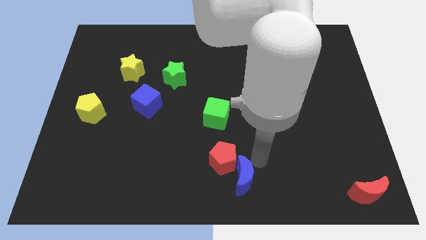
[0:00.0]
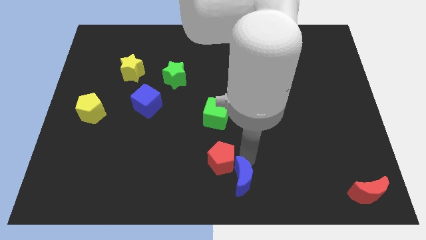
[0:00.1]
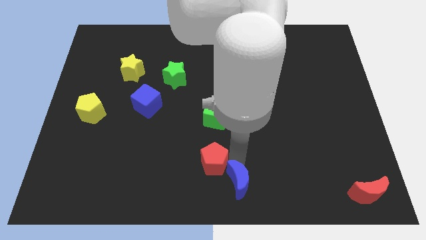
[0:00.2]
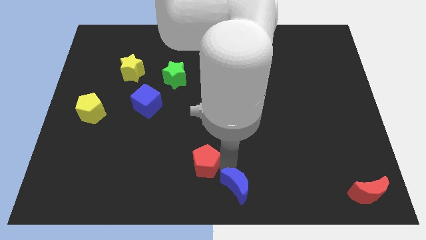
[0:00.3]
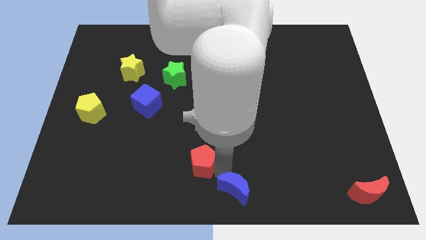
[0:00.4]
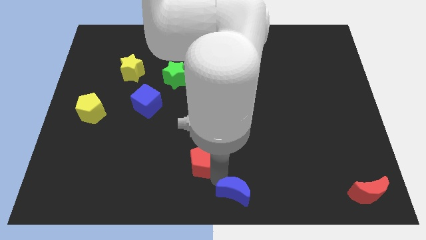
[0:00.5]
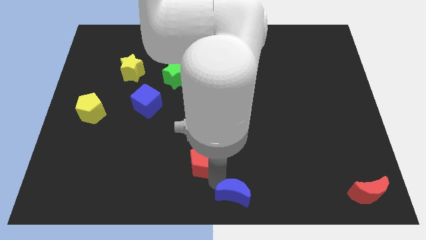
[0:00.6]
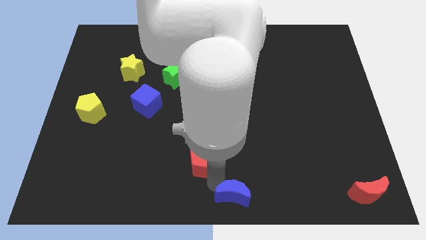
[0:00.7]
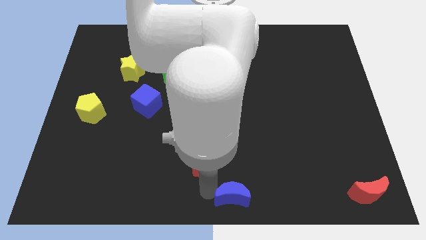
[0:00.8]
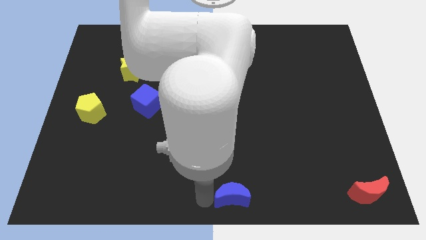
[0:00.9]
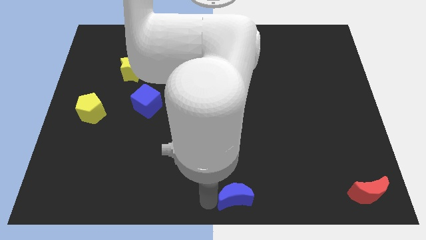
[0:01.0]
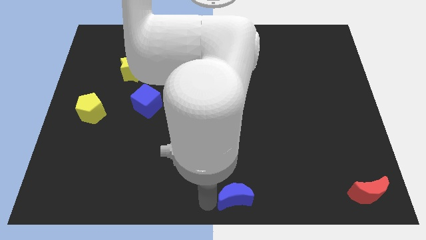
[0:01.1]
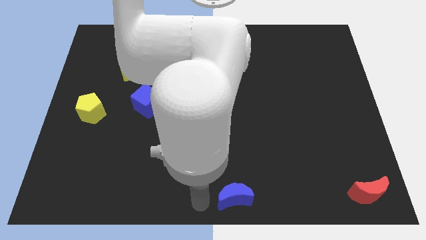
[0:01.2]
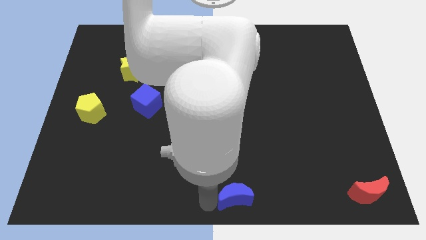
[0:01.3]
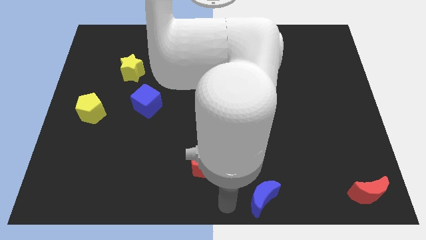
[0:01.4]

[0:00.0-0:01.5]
separate the red pentagon and the blue moon

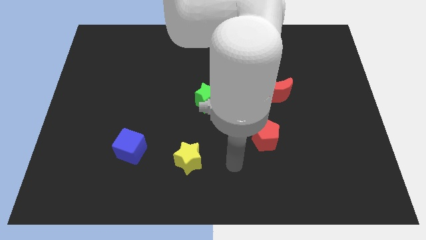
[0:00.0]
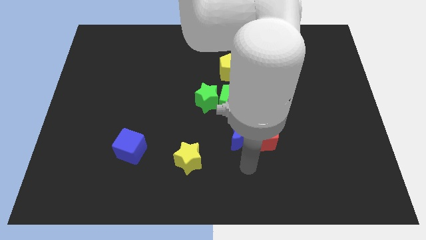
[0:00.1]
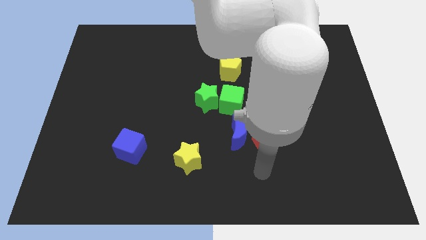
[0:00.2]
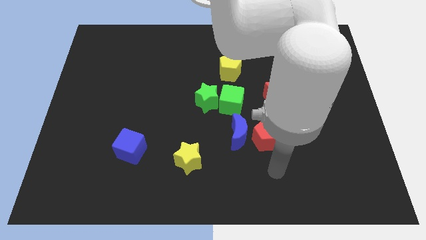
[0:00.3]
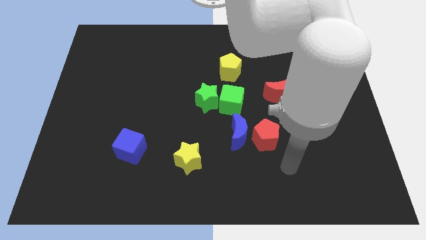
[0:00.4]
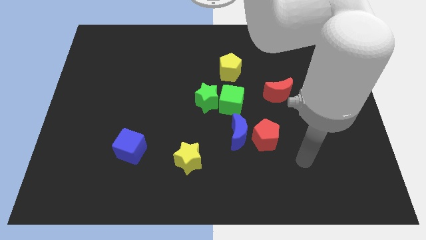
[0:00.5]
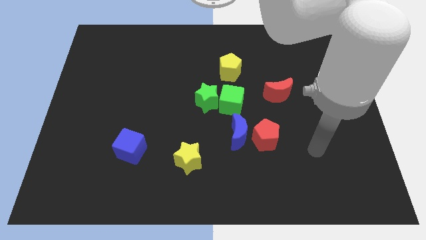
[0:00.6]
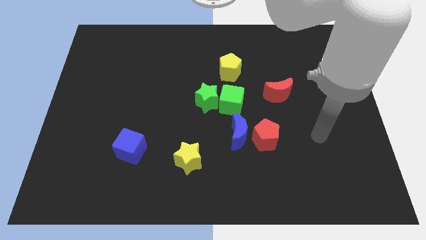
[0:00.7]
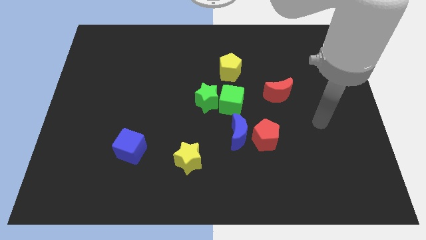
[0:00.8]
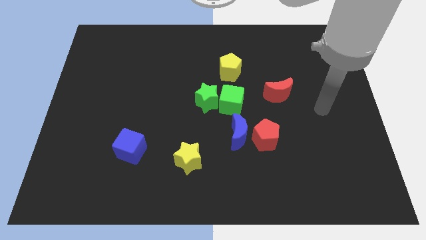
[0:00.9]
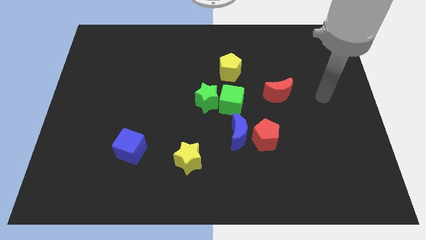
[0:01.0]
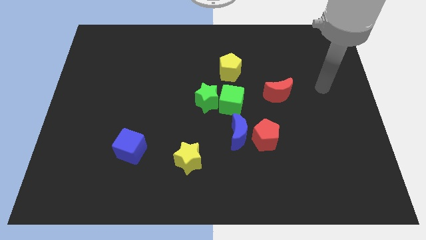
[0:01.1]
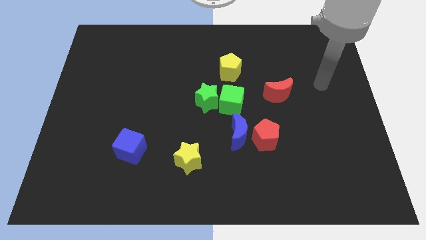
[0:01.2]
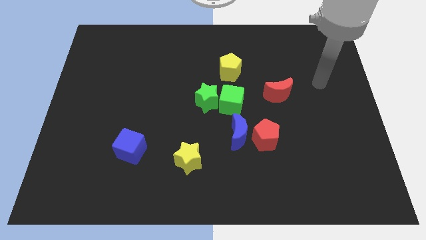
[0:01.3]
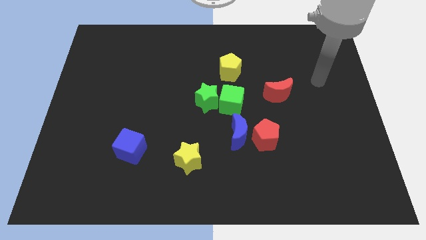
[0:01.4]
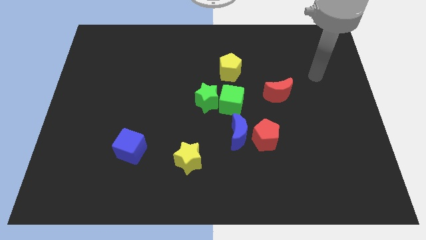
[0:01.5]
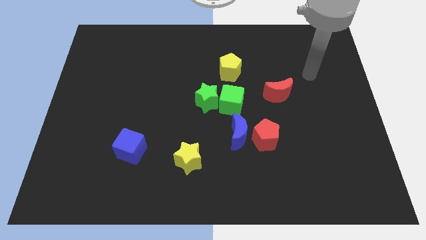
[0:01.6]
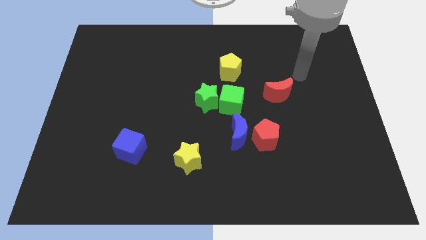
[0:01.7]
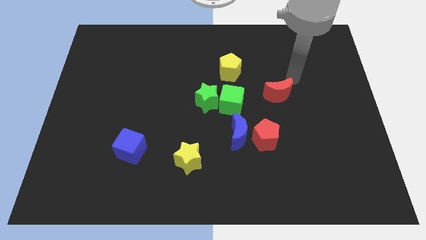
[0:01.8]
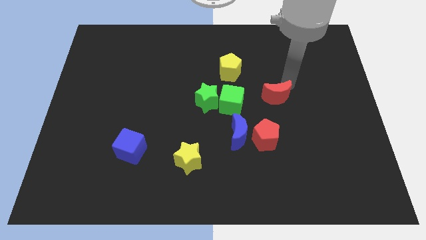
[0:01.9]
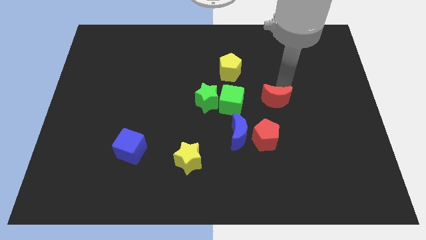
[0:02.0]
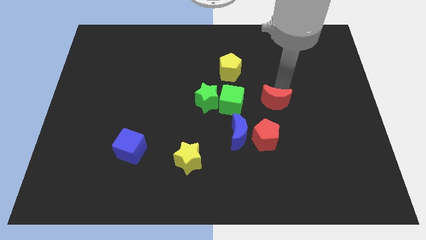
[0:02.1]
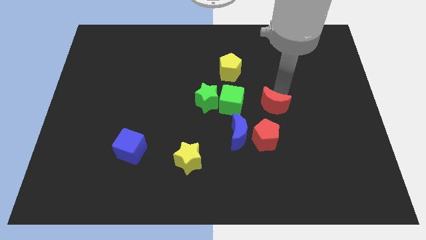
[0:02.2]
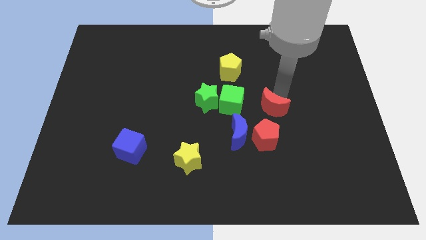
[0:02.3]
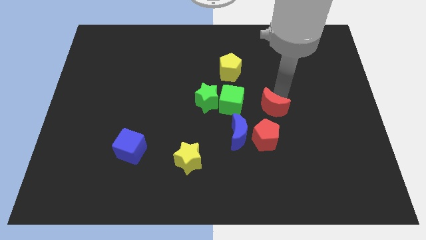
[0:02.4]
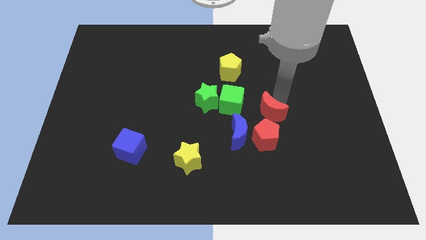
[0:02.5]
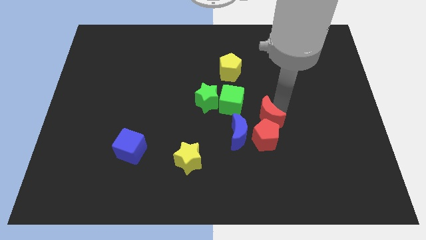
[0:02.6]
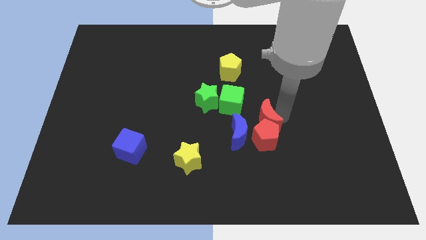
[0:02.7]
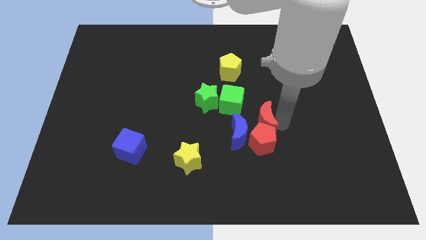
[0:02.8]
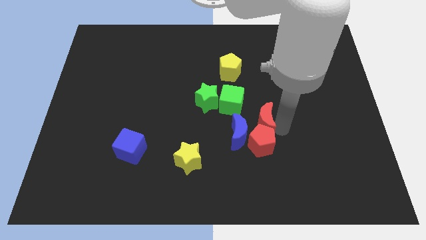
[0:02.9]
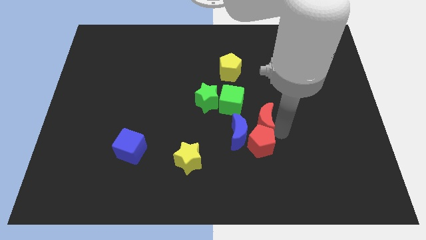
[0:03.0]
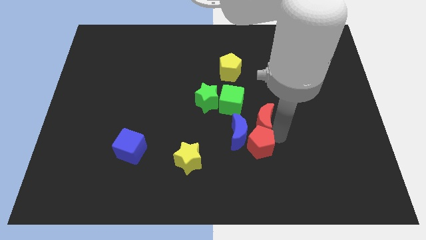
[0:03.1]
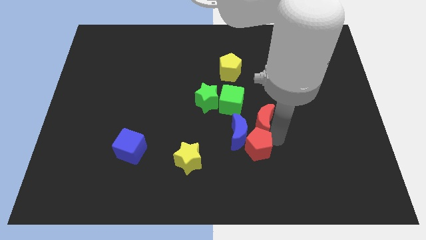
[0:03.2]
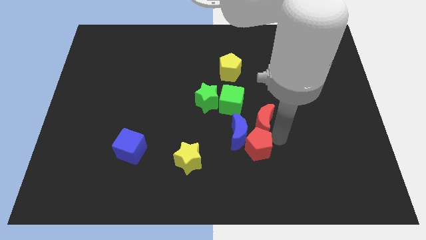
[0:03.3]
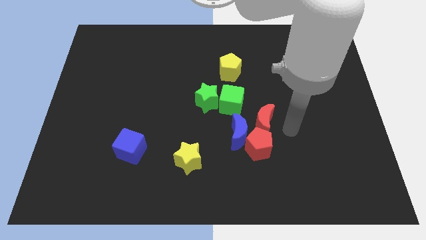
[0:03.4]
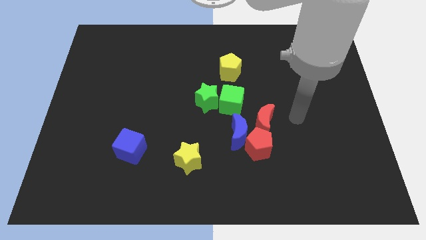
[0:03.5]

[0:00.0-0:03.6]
place the red crescent above the red pentagon

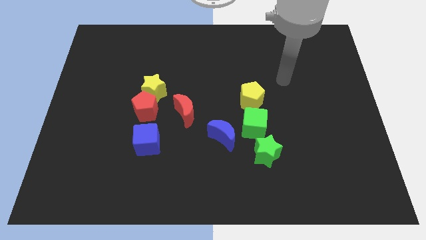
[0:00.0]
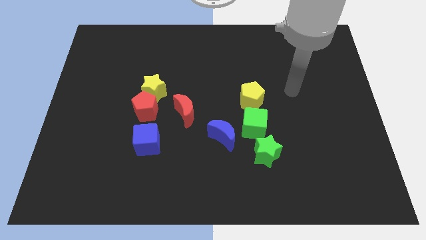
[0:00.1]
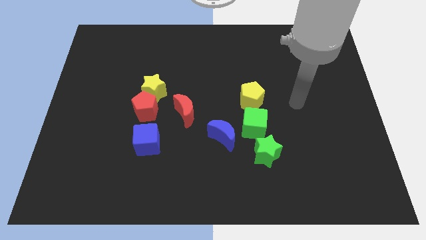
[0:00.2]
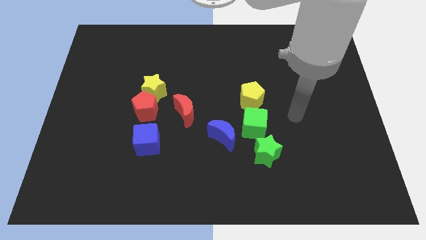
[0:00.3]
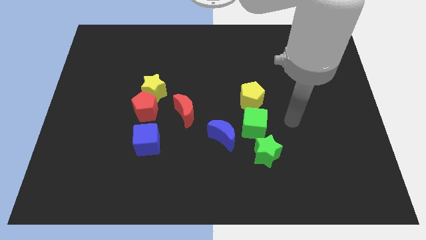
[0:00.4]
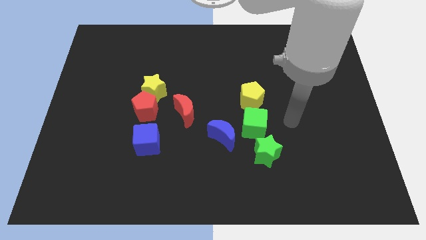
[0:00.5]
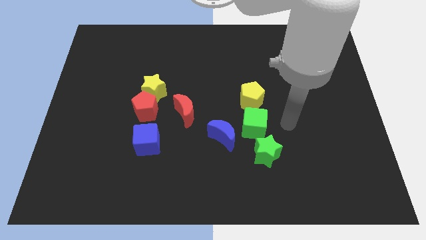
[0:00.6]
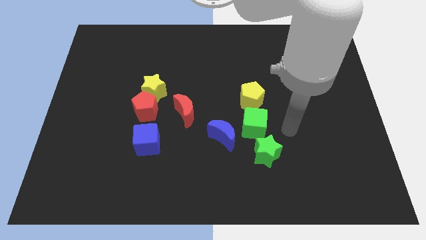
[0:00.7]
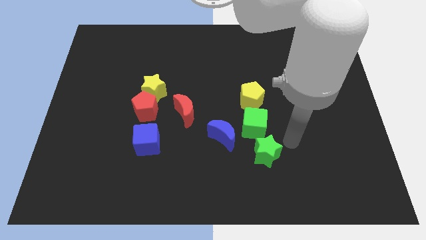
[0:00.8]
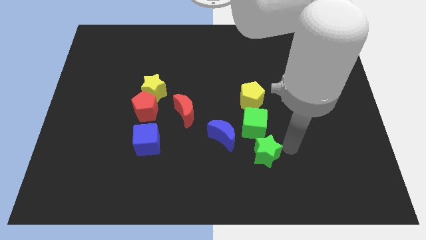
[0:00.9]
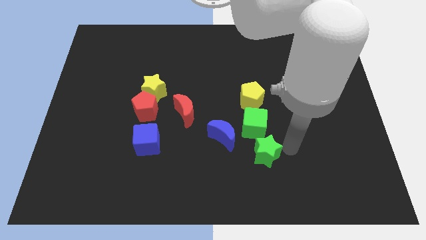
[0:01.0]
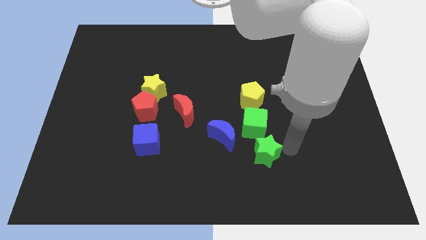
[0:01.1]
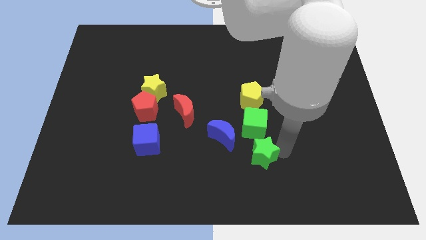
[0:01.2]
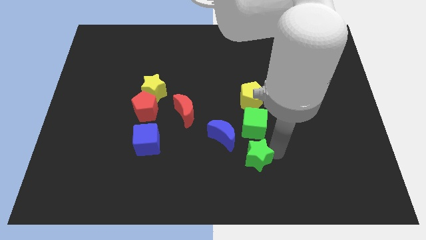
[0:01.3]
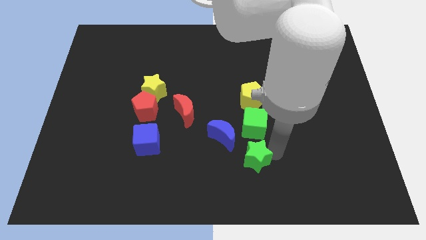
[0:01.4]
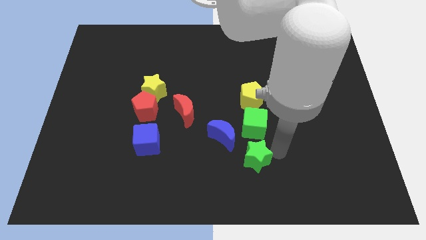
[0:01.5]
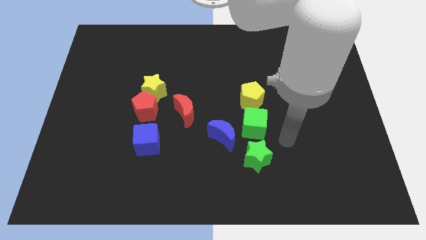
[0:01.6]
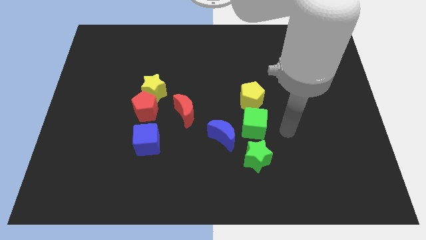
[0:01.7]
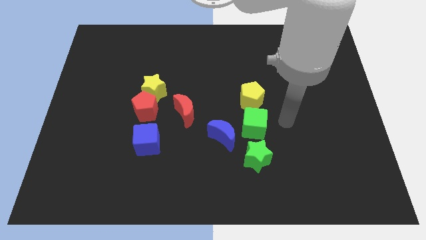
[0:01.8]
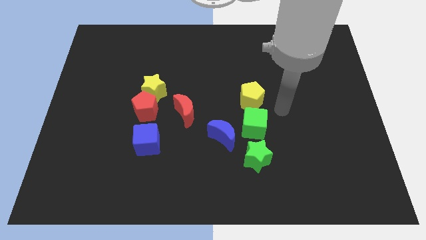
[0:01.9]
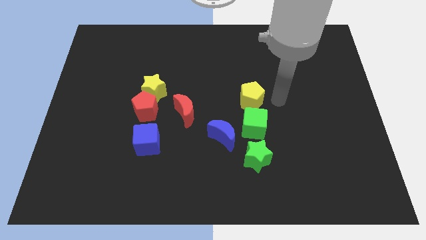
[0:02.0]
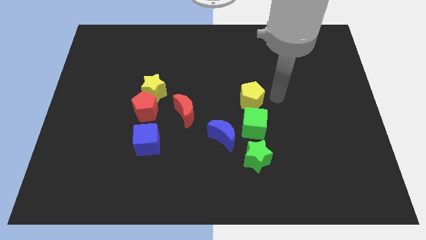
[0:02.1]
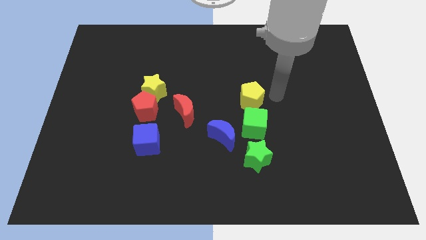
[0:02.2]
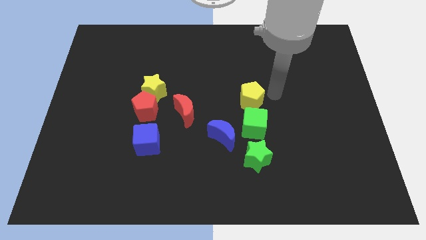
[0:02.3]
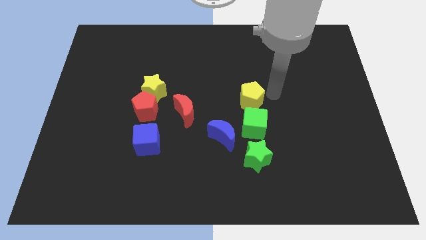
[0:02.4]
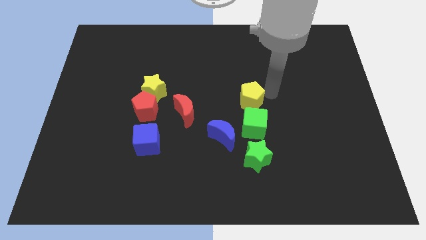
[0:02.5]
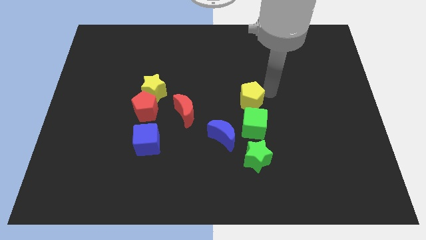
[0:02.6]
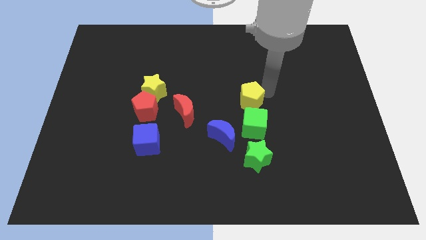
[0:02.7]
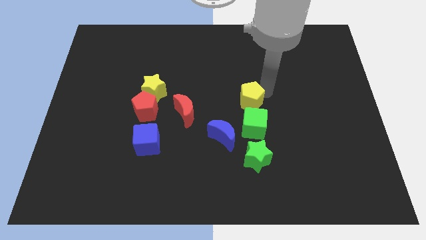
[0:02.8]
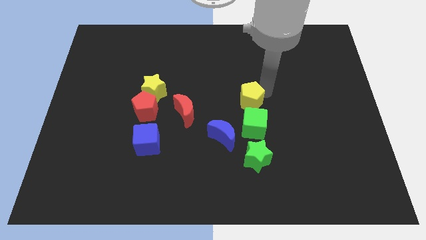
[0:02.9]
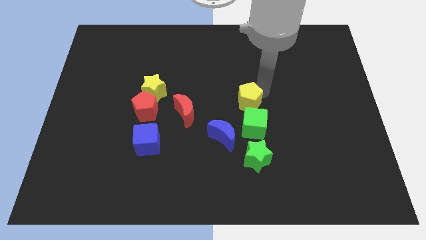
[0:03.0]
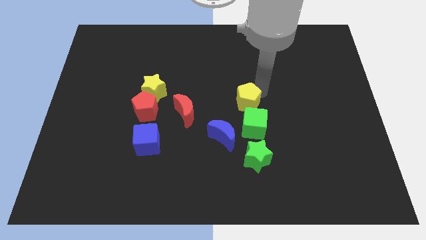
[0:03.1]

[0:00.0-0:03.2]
move the green star below the green cube

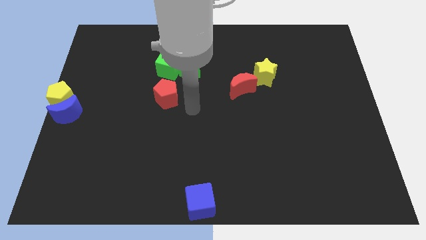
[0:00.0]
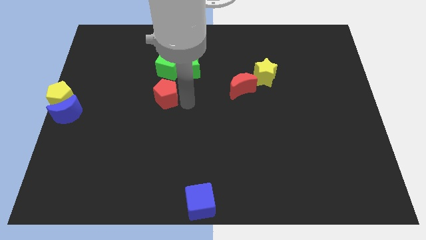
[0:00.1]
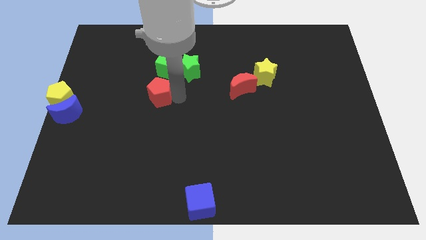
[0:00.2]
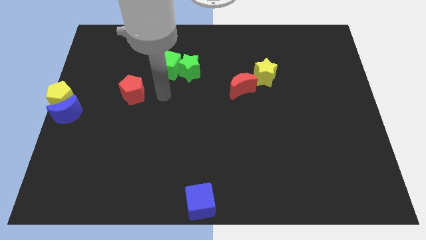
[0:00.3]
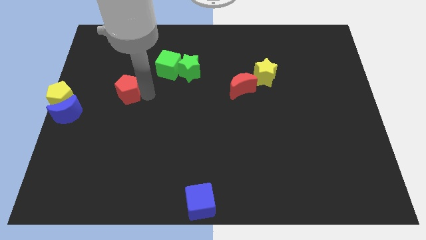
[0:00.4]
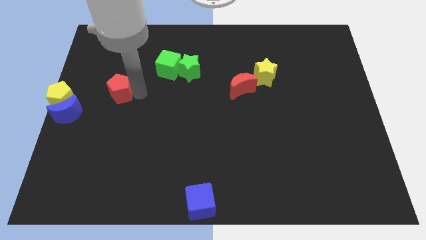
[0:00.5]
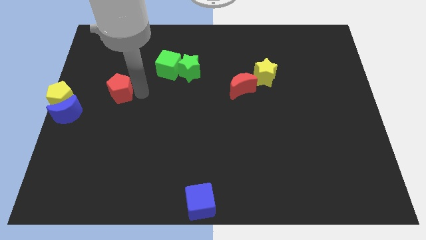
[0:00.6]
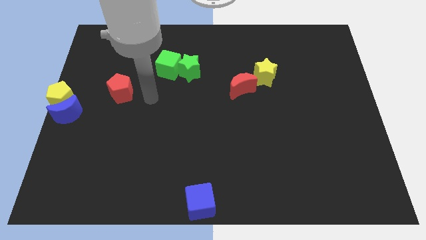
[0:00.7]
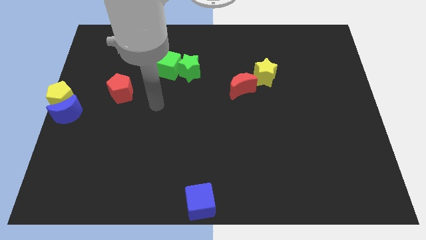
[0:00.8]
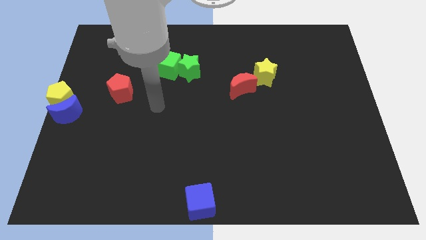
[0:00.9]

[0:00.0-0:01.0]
slightly move the red pentagon towards the left
